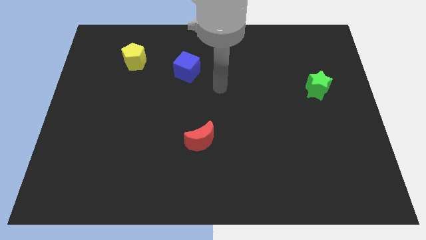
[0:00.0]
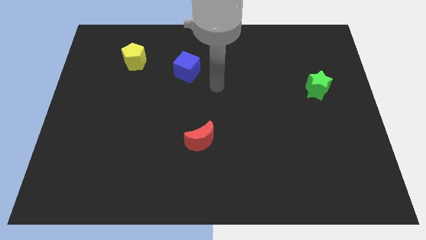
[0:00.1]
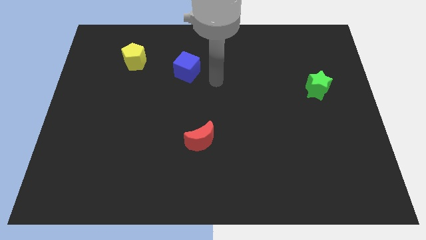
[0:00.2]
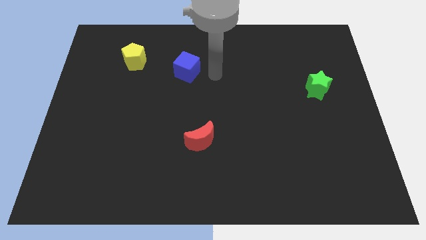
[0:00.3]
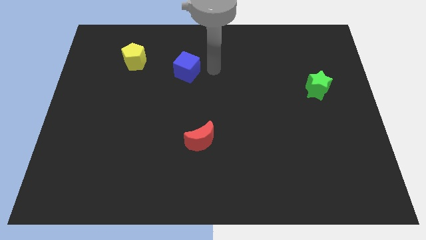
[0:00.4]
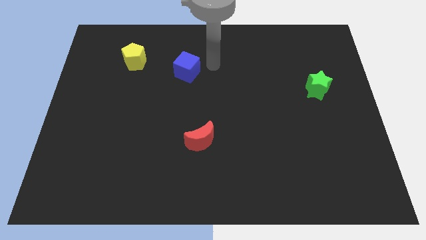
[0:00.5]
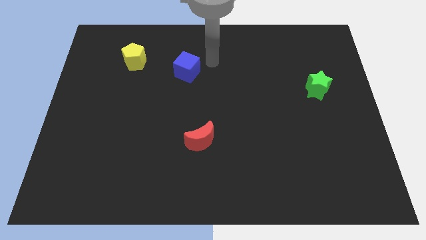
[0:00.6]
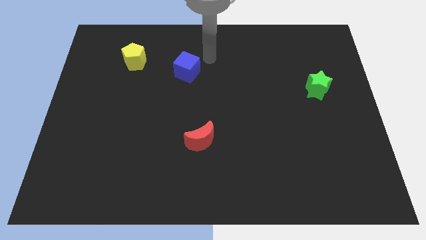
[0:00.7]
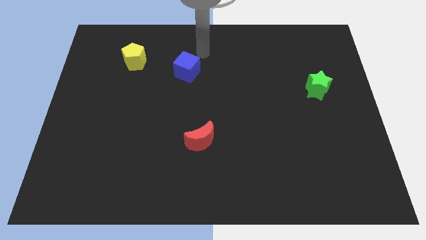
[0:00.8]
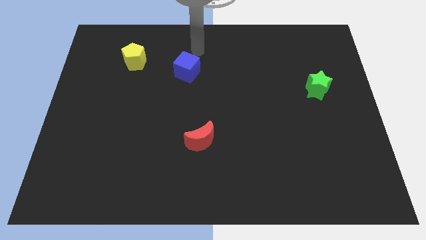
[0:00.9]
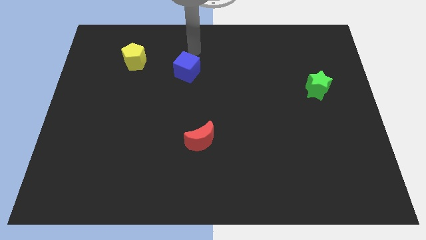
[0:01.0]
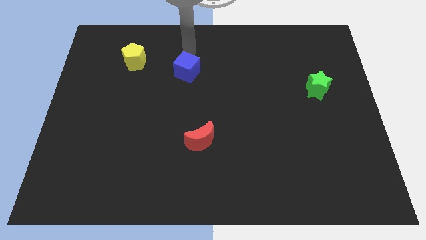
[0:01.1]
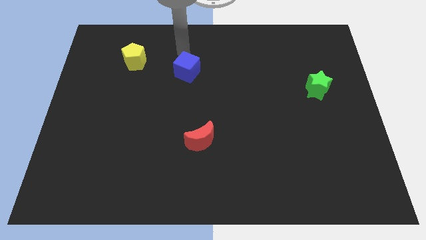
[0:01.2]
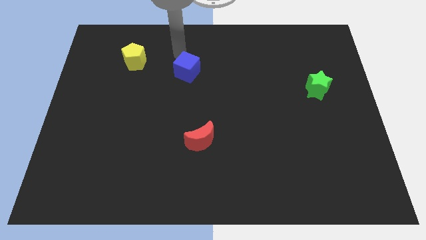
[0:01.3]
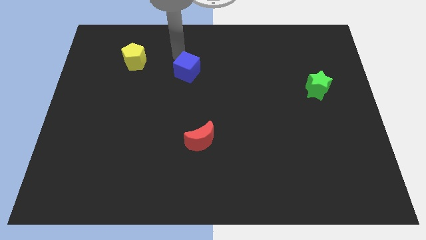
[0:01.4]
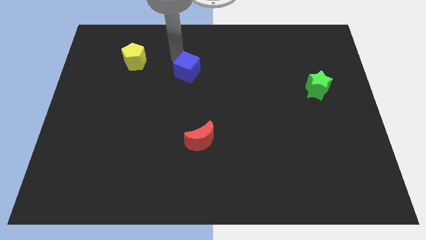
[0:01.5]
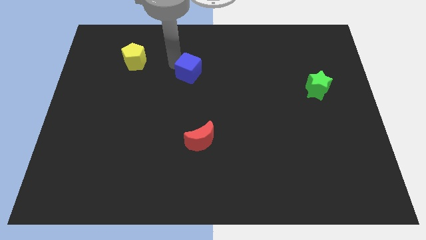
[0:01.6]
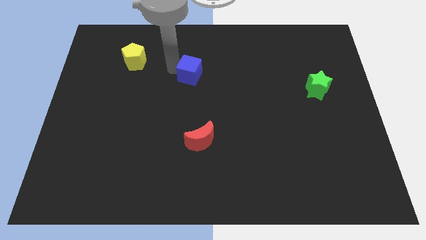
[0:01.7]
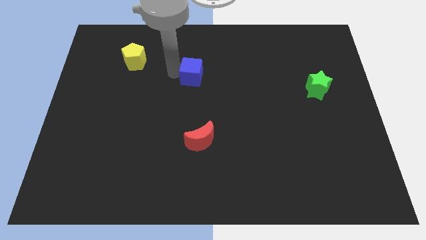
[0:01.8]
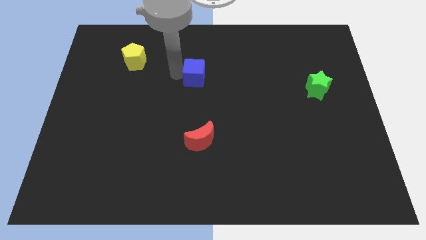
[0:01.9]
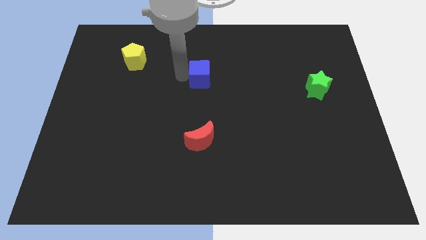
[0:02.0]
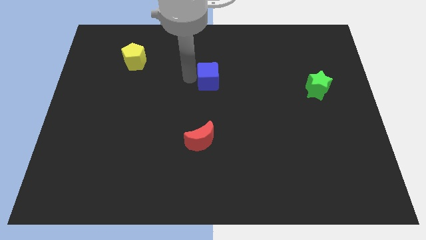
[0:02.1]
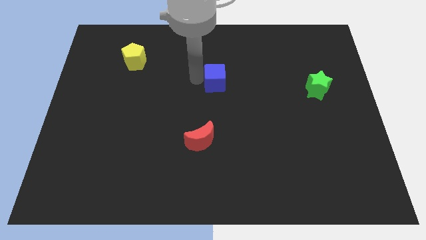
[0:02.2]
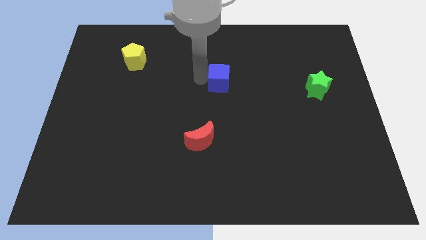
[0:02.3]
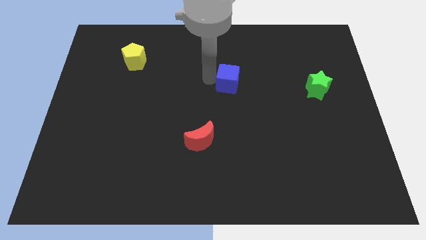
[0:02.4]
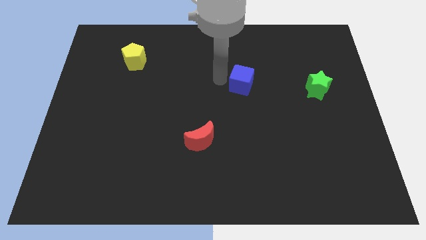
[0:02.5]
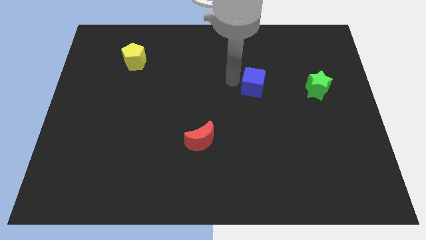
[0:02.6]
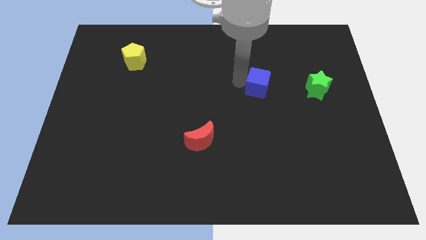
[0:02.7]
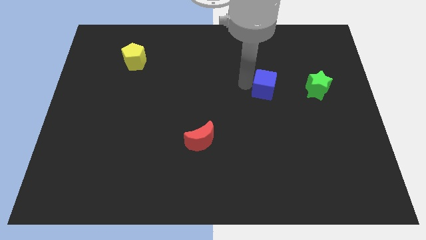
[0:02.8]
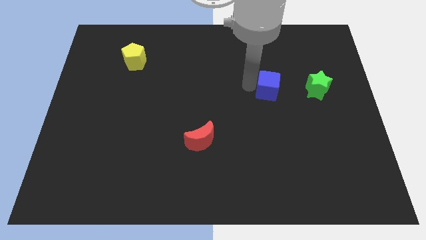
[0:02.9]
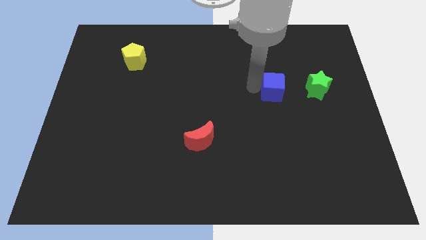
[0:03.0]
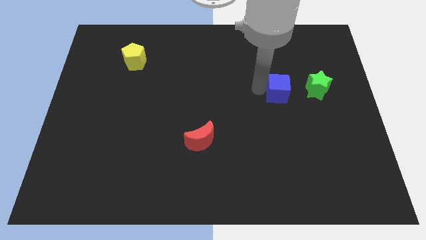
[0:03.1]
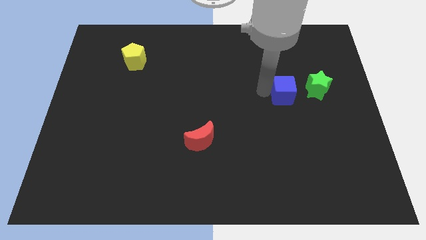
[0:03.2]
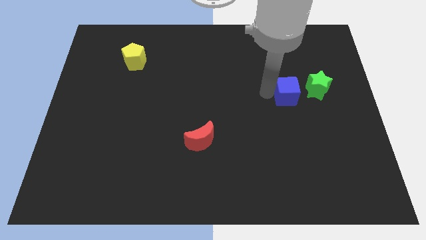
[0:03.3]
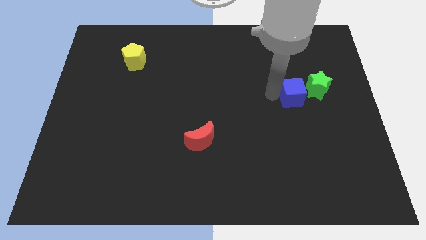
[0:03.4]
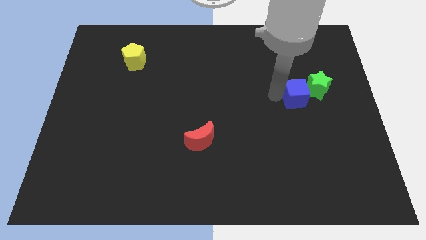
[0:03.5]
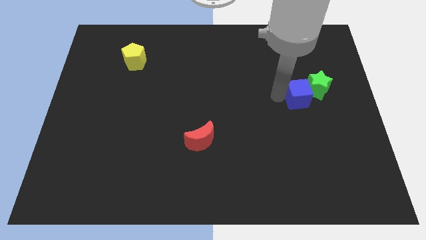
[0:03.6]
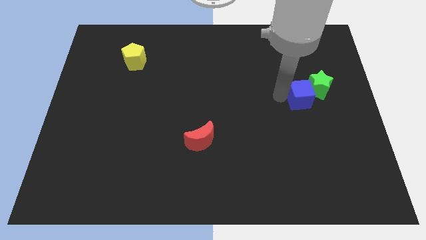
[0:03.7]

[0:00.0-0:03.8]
slide the cube close to the star

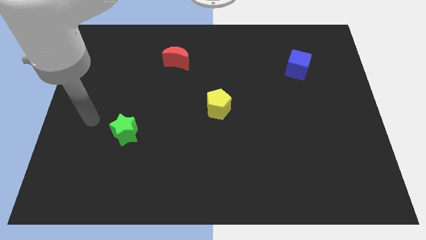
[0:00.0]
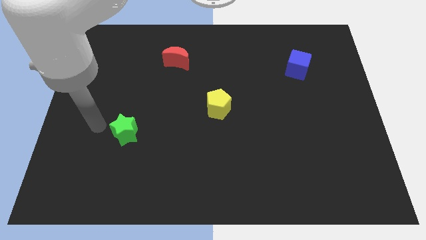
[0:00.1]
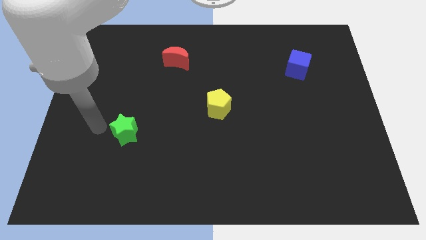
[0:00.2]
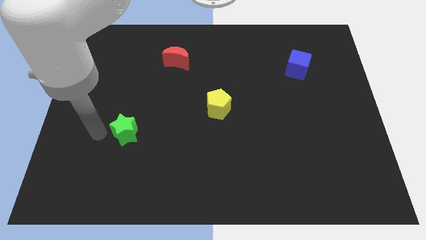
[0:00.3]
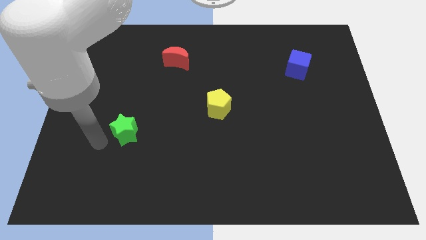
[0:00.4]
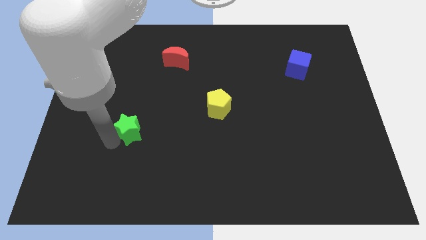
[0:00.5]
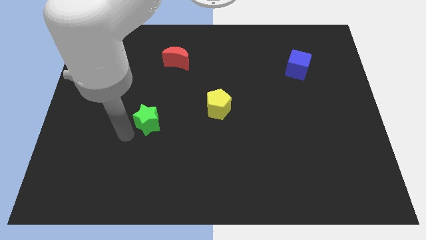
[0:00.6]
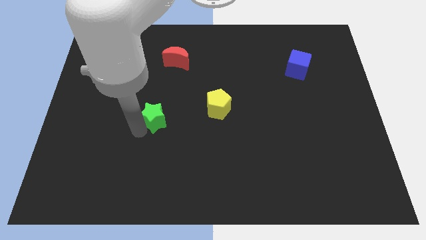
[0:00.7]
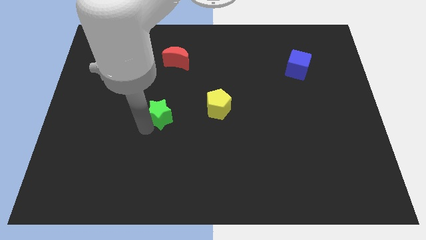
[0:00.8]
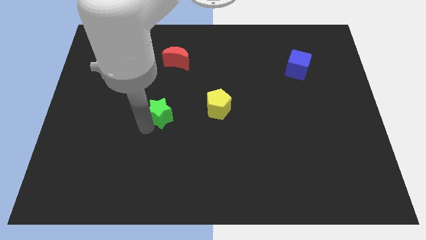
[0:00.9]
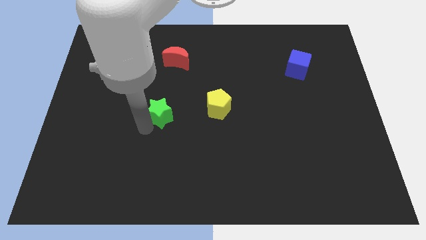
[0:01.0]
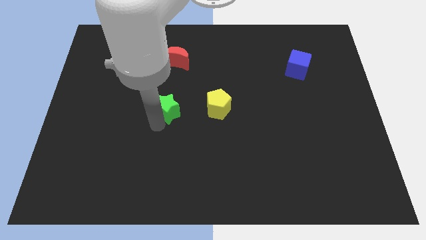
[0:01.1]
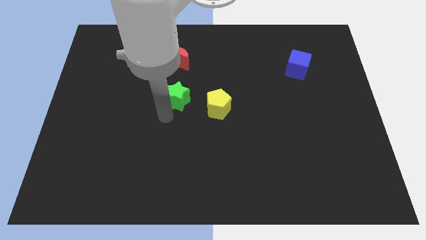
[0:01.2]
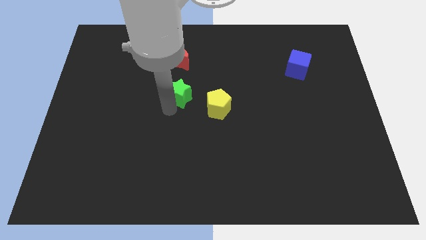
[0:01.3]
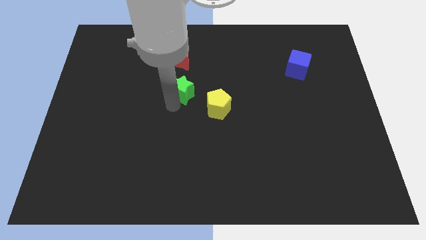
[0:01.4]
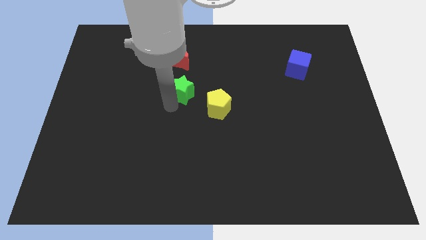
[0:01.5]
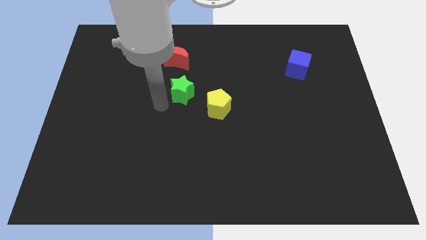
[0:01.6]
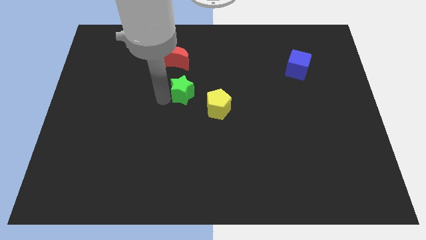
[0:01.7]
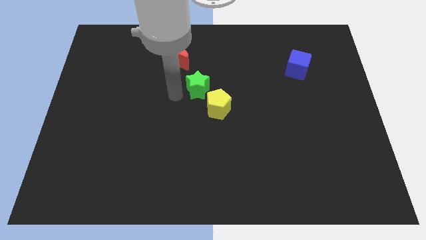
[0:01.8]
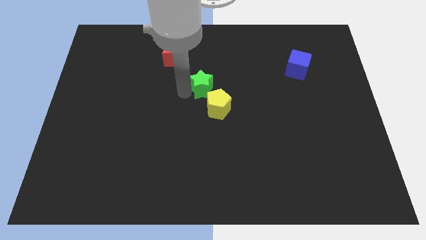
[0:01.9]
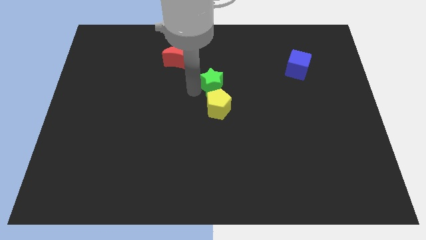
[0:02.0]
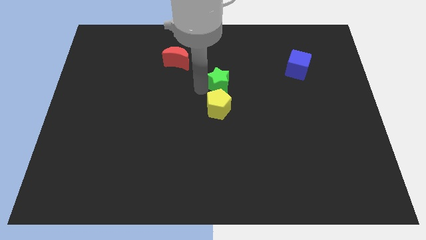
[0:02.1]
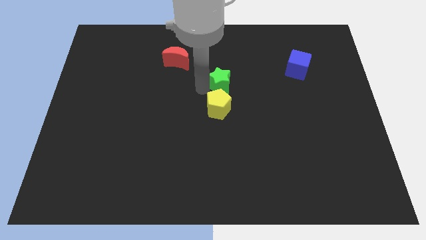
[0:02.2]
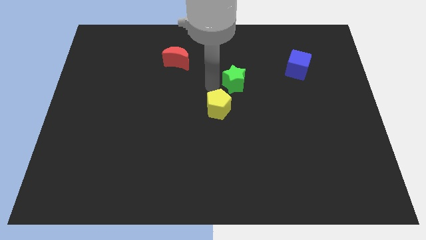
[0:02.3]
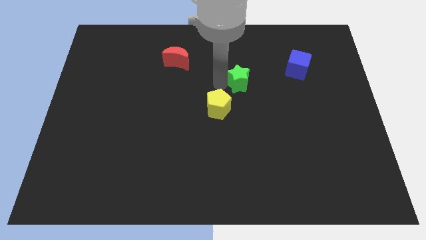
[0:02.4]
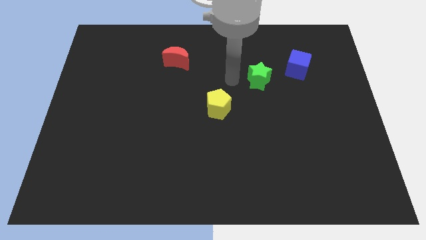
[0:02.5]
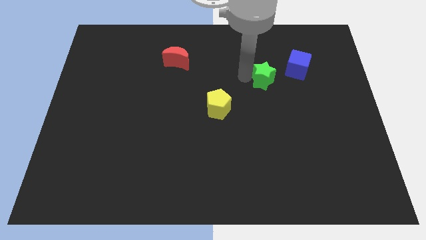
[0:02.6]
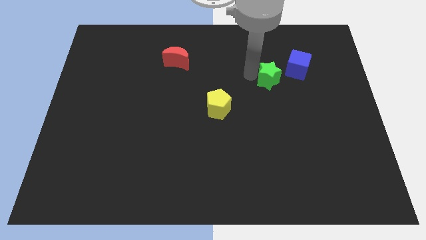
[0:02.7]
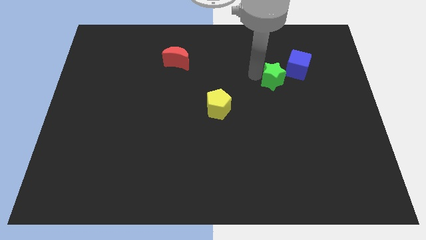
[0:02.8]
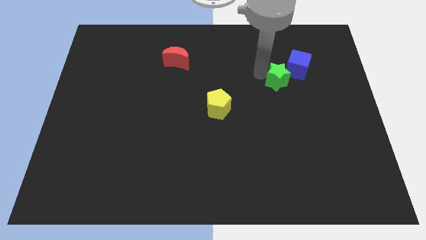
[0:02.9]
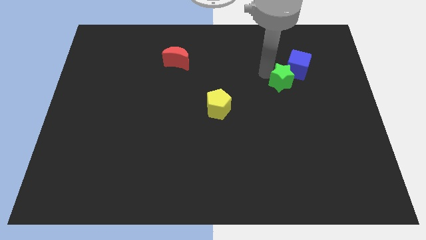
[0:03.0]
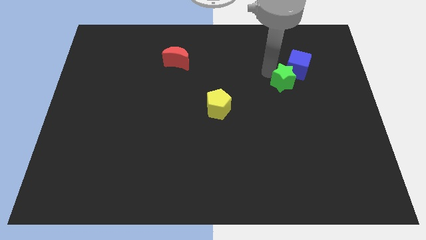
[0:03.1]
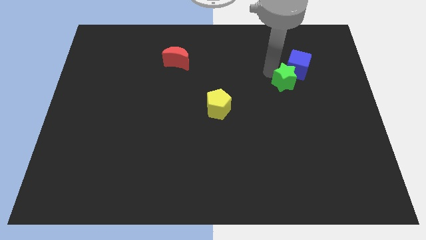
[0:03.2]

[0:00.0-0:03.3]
move the green star towards the cube

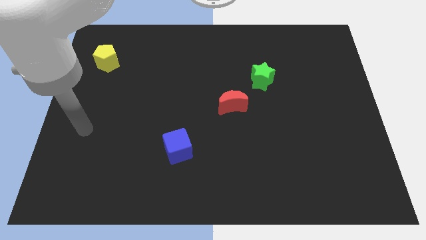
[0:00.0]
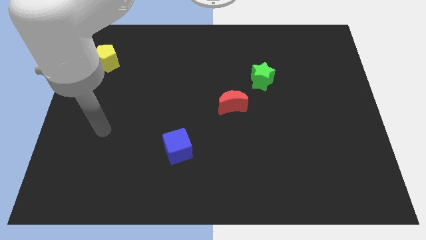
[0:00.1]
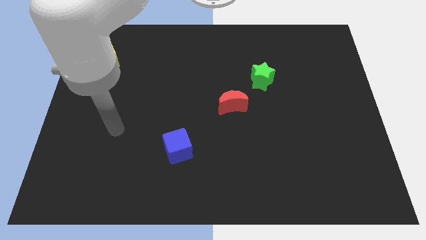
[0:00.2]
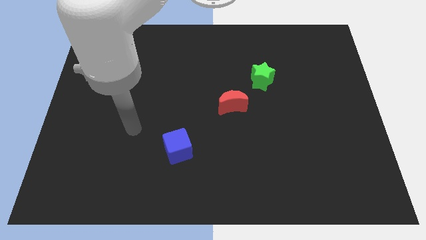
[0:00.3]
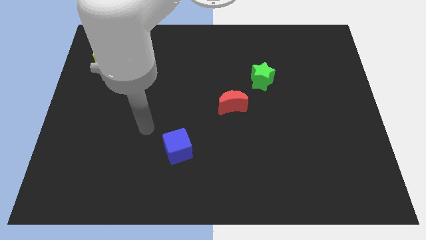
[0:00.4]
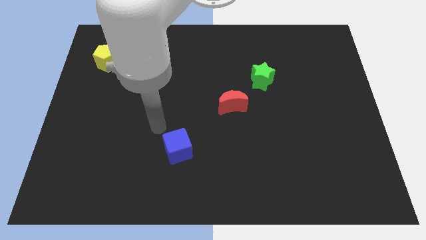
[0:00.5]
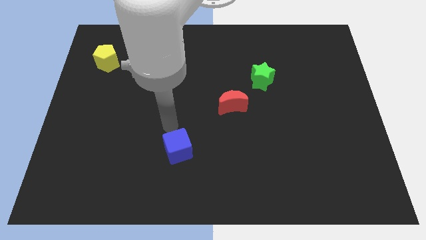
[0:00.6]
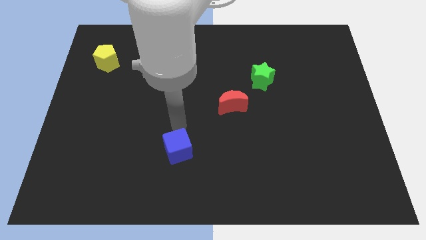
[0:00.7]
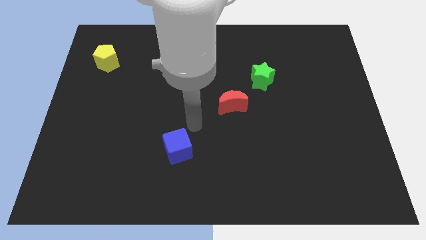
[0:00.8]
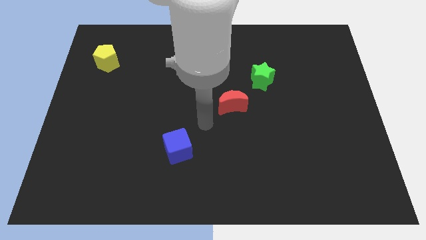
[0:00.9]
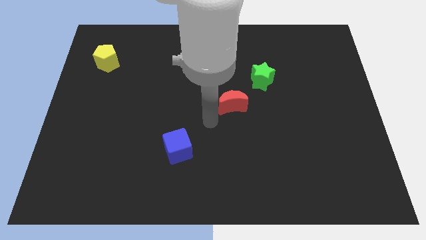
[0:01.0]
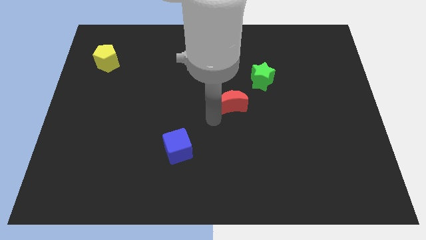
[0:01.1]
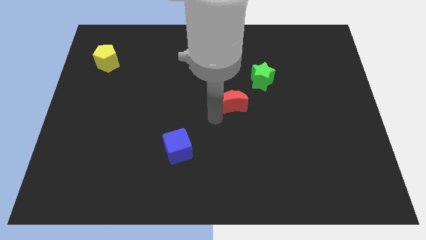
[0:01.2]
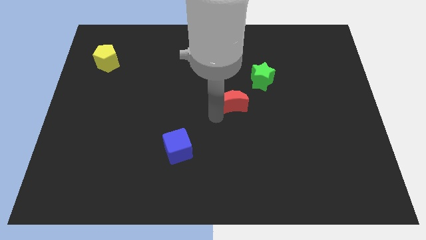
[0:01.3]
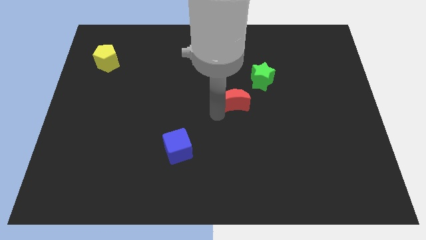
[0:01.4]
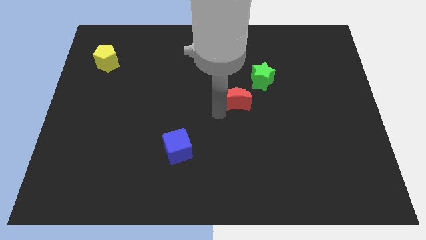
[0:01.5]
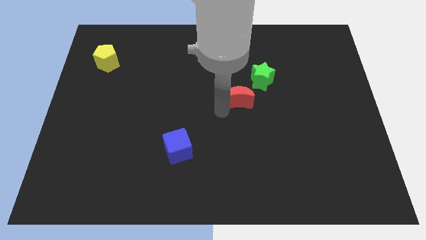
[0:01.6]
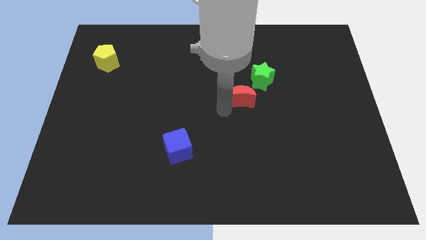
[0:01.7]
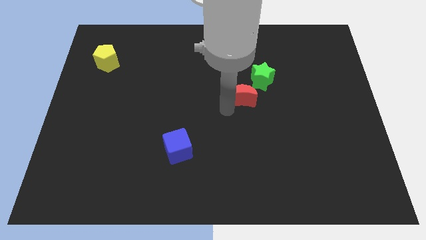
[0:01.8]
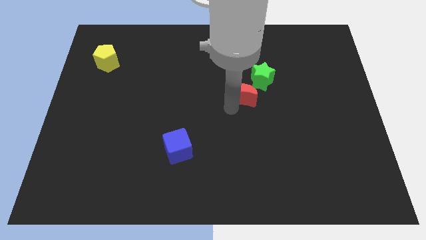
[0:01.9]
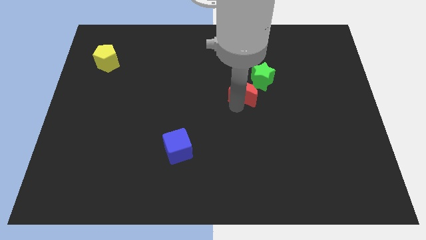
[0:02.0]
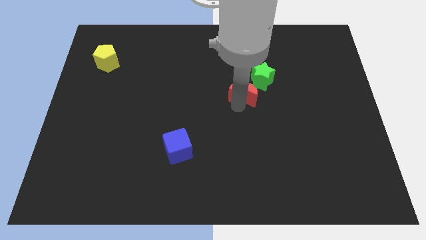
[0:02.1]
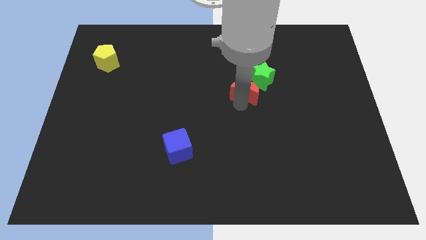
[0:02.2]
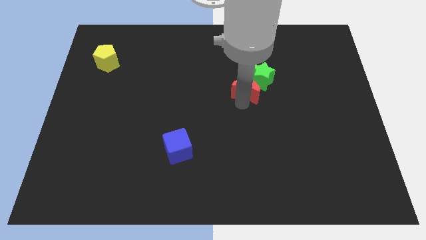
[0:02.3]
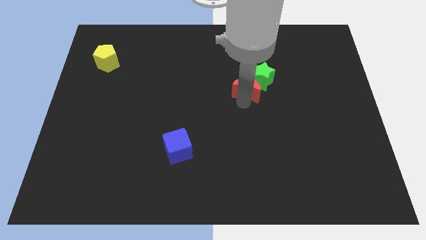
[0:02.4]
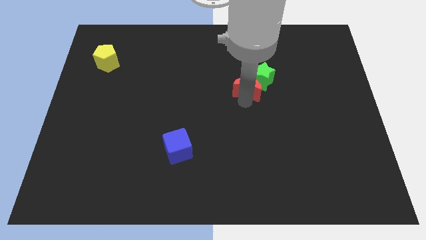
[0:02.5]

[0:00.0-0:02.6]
push the moon close to the star
